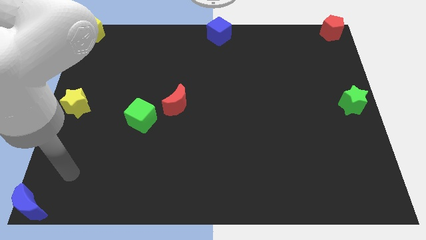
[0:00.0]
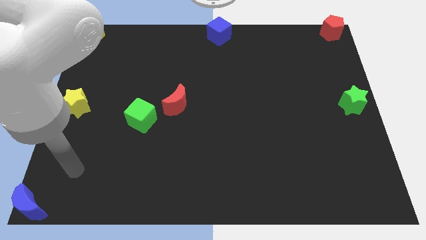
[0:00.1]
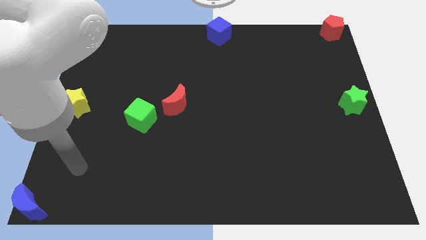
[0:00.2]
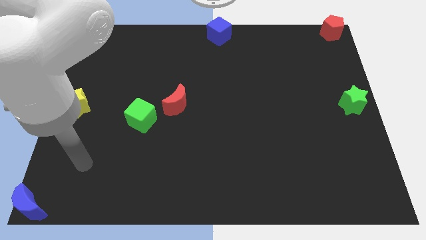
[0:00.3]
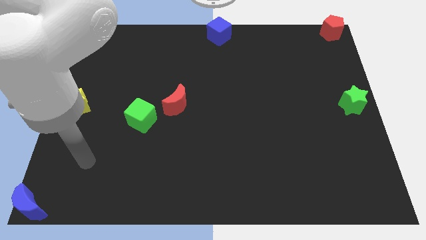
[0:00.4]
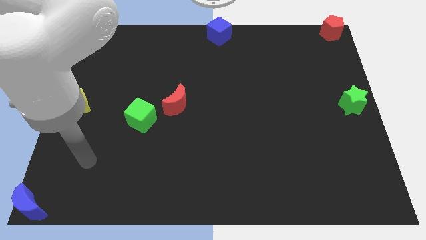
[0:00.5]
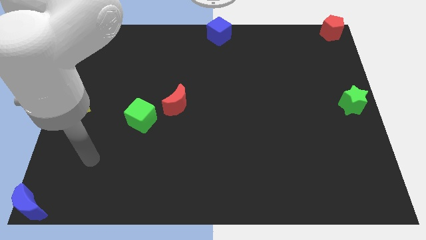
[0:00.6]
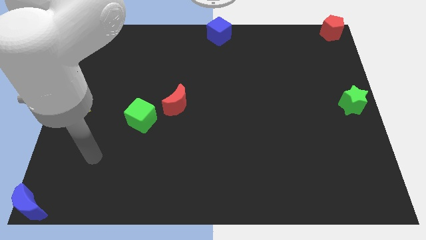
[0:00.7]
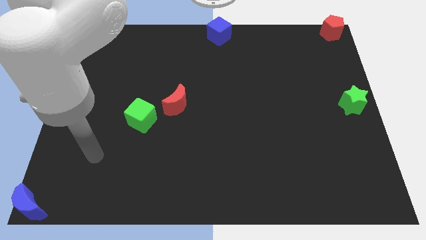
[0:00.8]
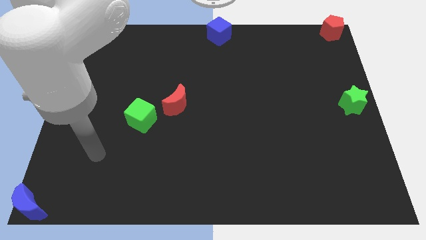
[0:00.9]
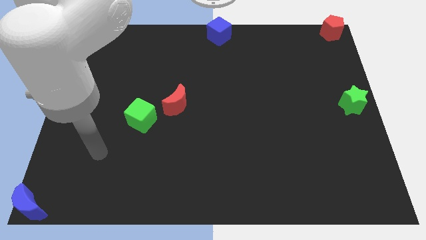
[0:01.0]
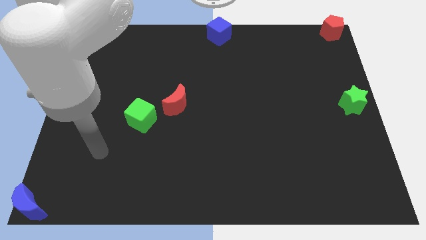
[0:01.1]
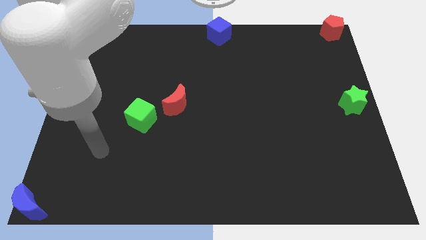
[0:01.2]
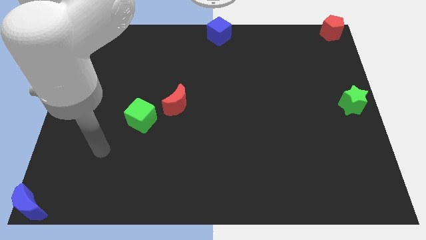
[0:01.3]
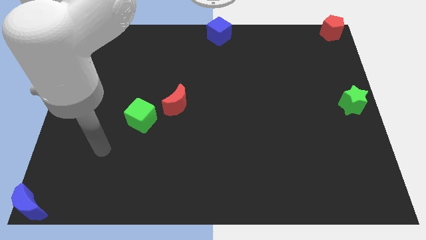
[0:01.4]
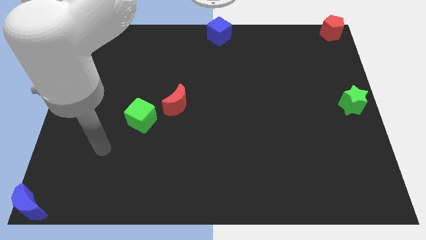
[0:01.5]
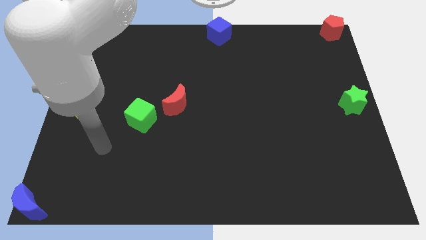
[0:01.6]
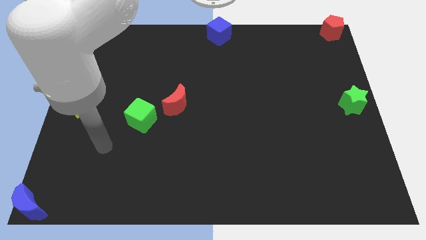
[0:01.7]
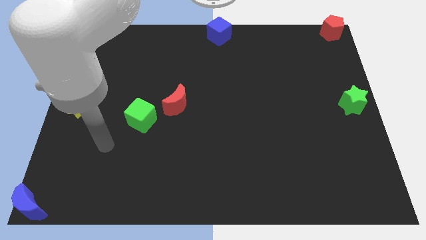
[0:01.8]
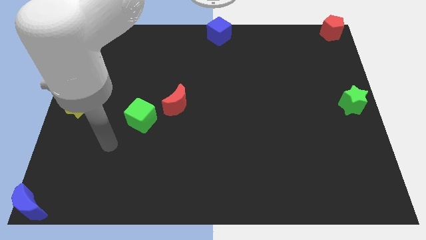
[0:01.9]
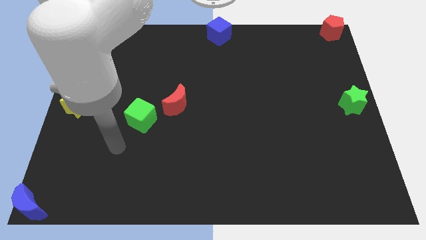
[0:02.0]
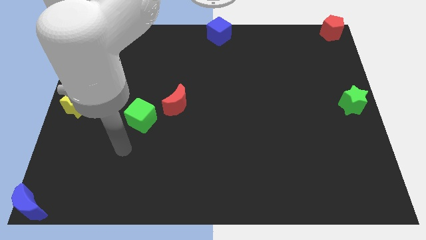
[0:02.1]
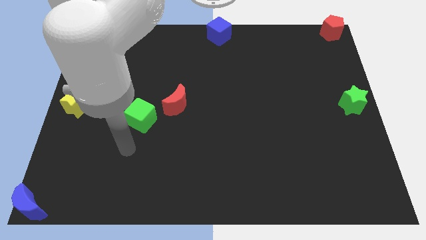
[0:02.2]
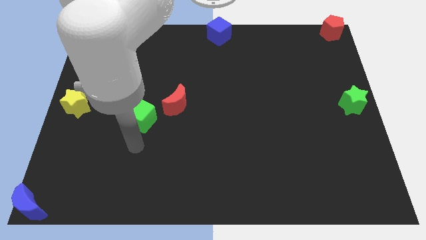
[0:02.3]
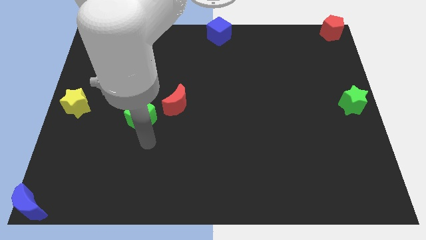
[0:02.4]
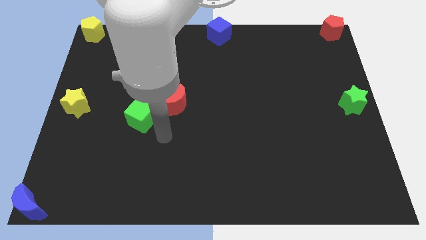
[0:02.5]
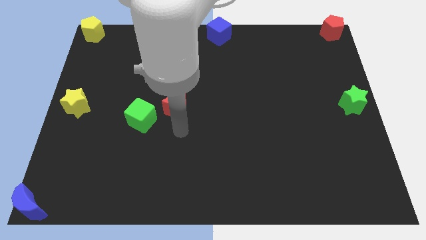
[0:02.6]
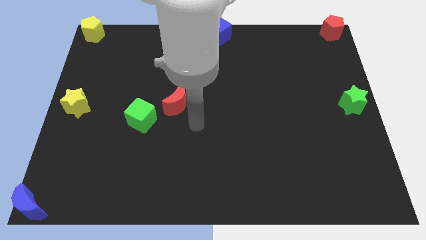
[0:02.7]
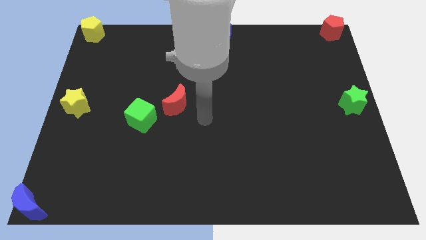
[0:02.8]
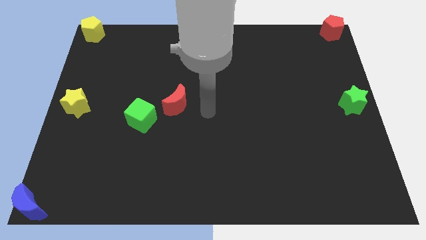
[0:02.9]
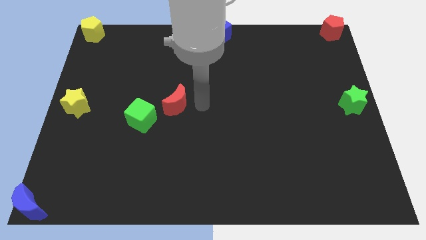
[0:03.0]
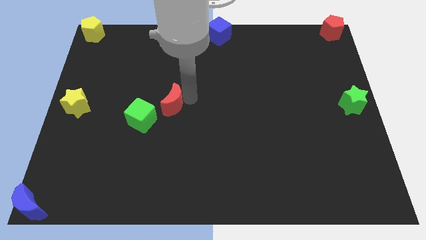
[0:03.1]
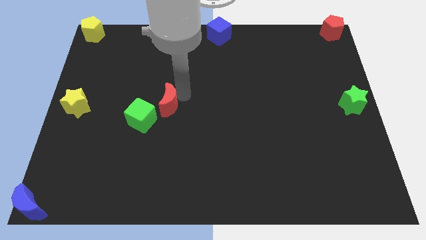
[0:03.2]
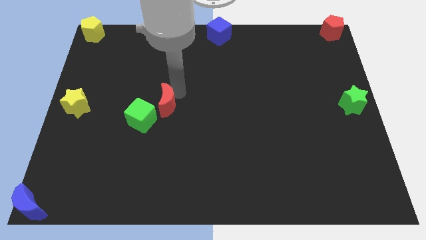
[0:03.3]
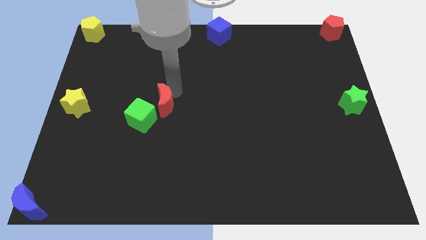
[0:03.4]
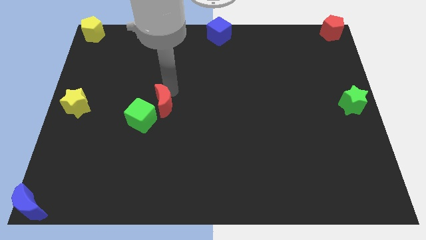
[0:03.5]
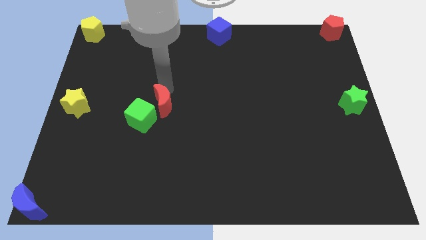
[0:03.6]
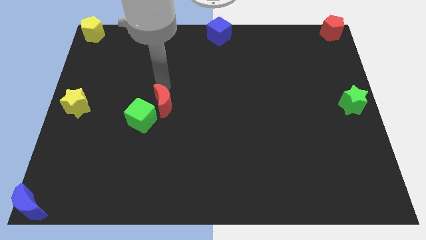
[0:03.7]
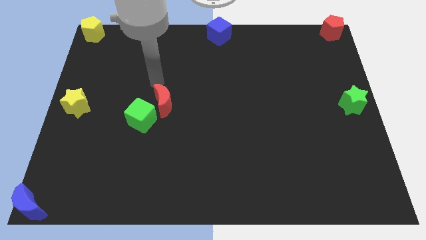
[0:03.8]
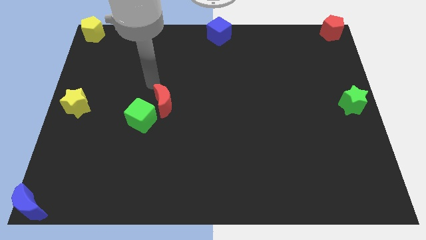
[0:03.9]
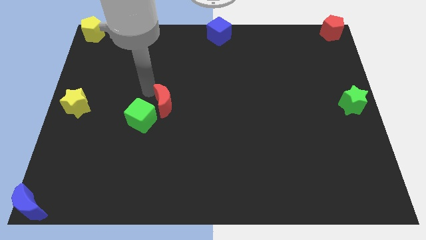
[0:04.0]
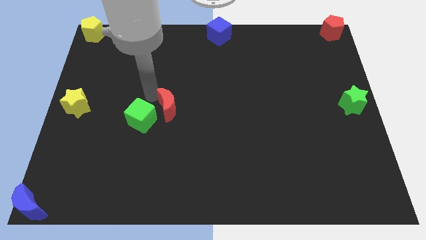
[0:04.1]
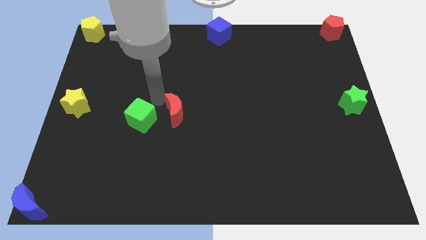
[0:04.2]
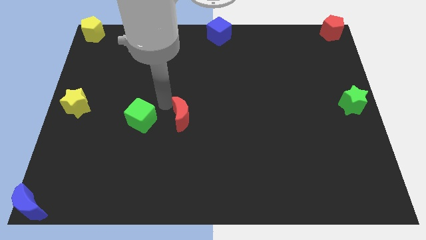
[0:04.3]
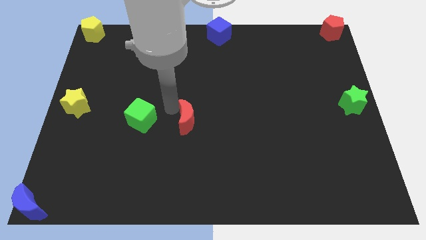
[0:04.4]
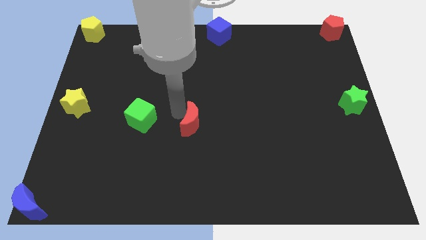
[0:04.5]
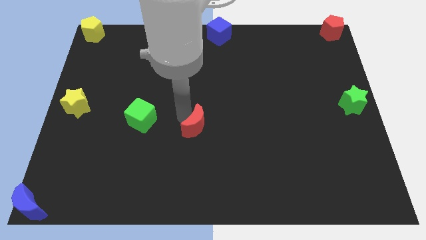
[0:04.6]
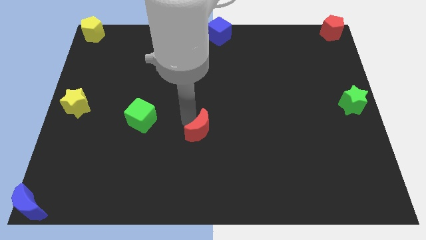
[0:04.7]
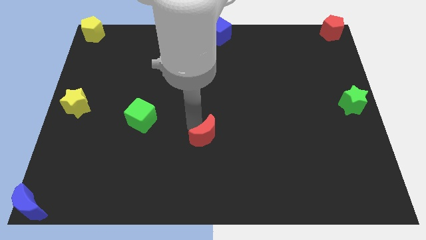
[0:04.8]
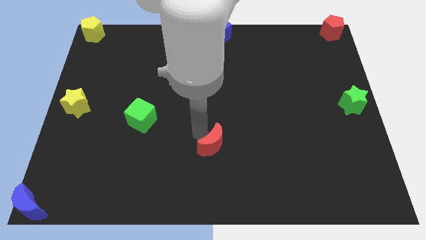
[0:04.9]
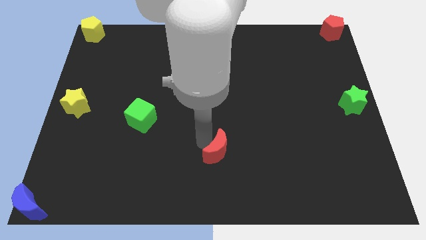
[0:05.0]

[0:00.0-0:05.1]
move the red moon away from the green cube

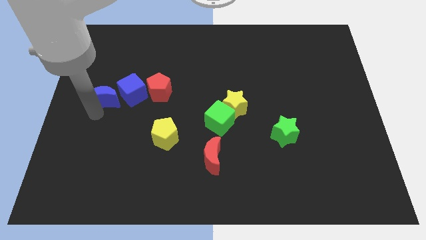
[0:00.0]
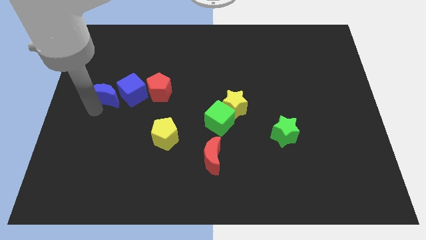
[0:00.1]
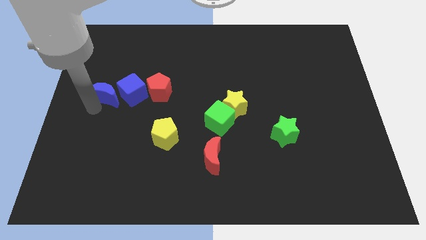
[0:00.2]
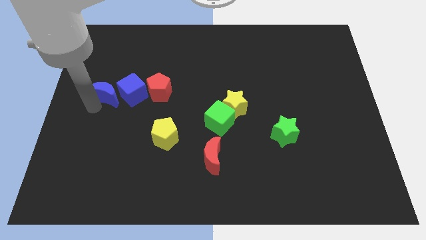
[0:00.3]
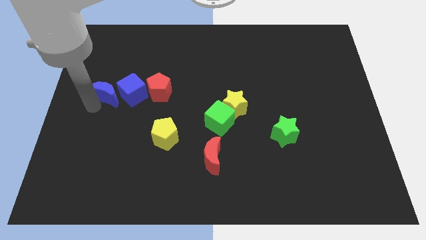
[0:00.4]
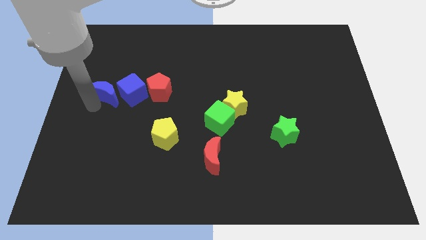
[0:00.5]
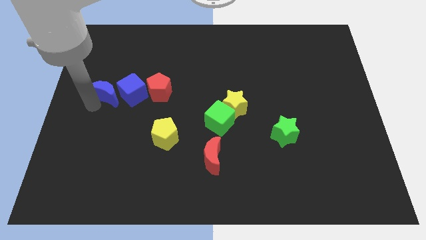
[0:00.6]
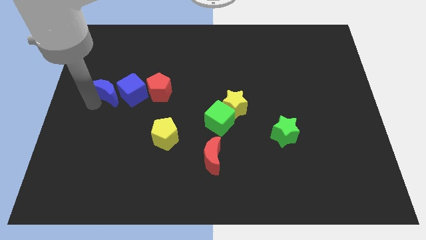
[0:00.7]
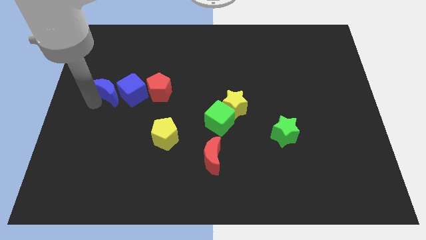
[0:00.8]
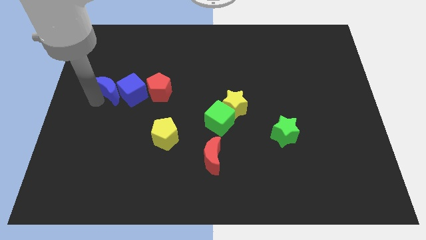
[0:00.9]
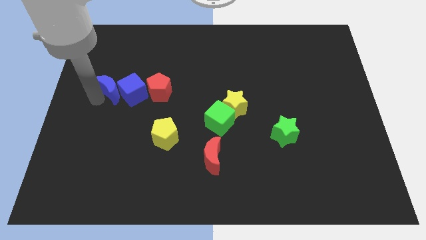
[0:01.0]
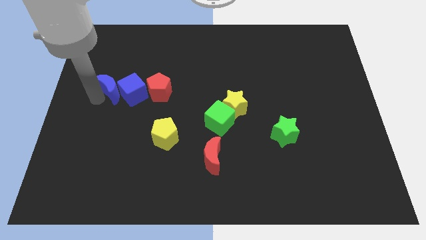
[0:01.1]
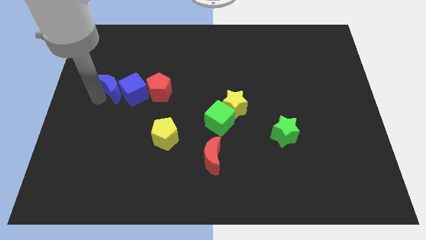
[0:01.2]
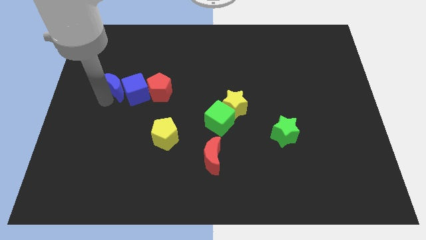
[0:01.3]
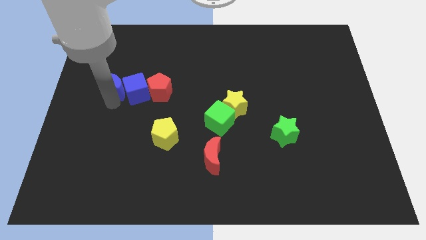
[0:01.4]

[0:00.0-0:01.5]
adjust blue moon slightly

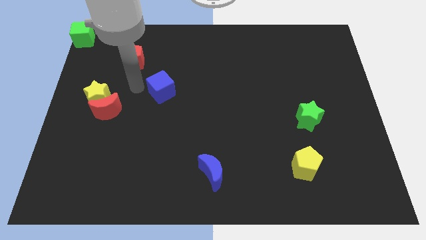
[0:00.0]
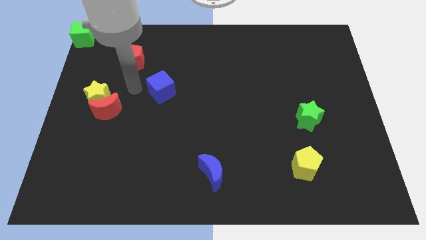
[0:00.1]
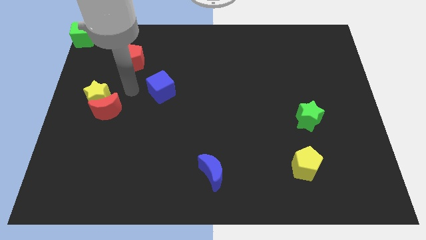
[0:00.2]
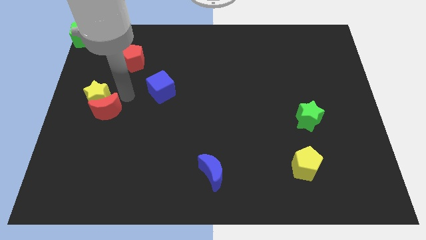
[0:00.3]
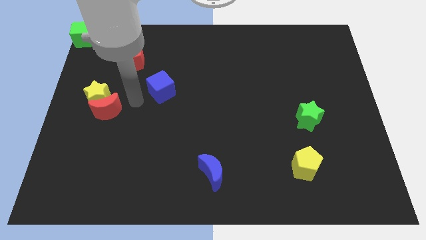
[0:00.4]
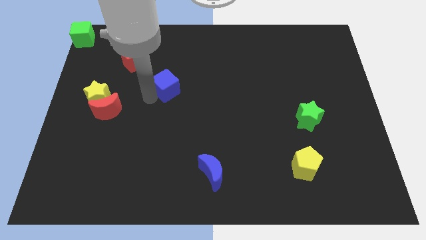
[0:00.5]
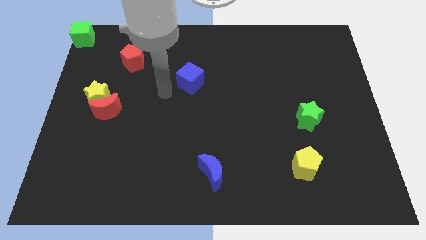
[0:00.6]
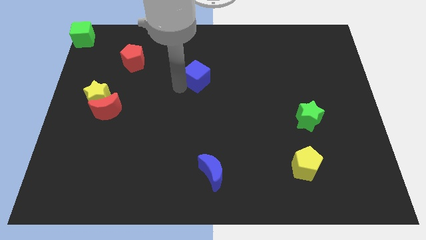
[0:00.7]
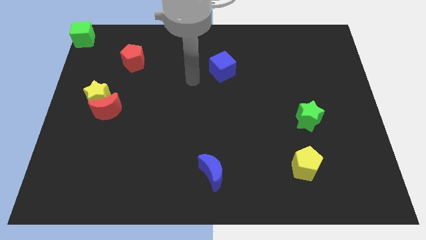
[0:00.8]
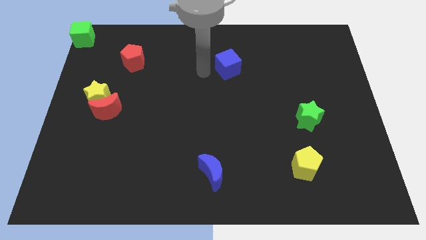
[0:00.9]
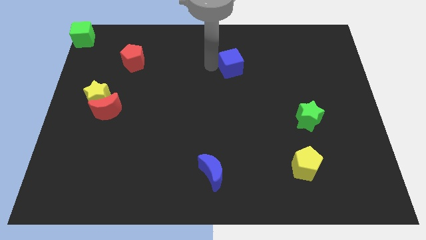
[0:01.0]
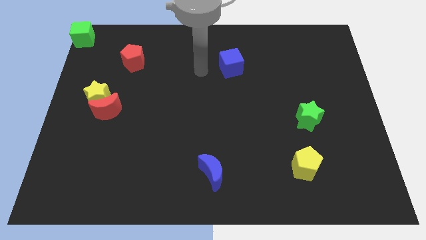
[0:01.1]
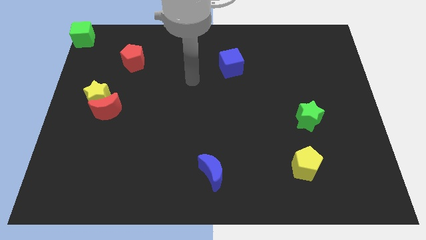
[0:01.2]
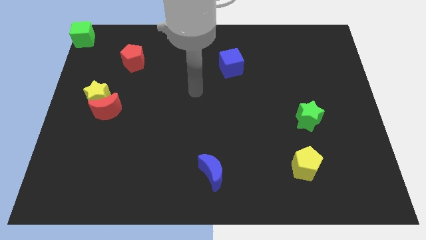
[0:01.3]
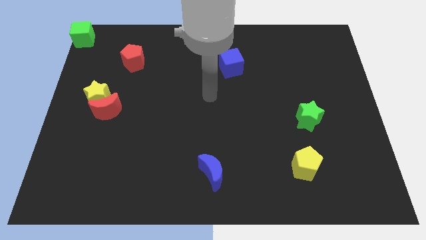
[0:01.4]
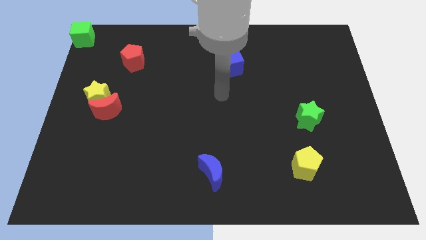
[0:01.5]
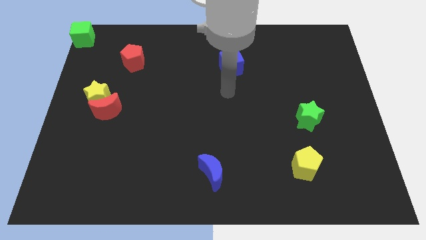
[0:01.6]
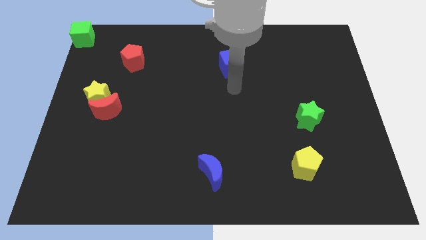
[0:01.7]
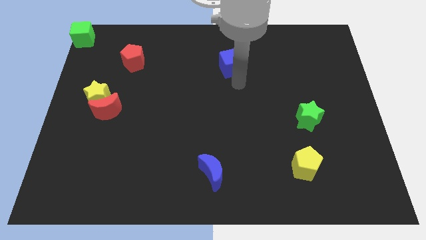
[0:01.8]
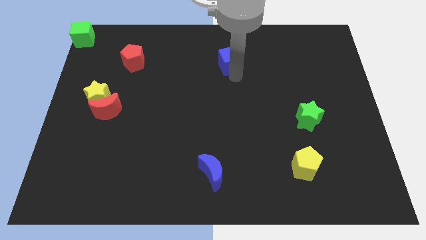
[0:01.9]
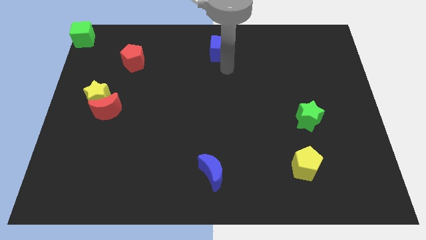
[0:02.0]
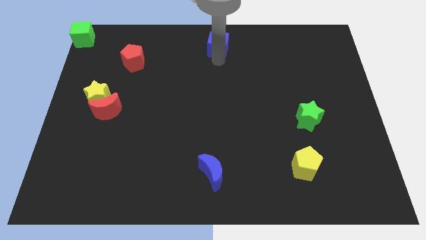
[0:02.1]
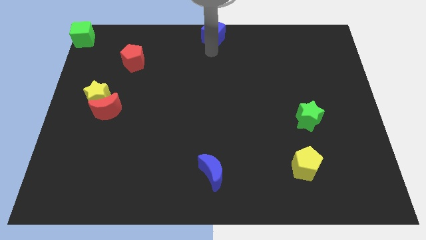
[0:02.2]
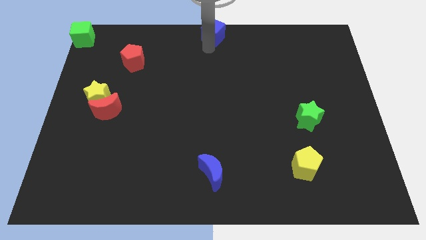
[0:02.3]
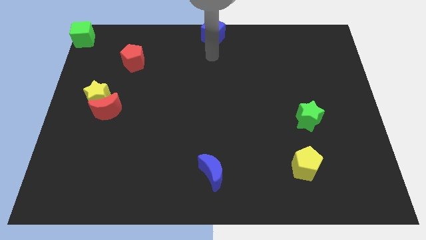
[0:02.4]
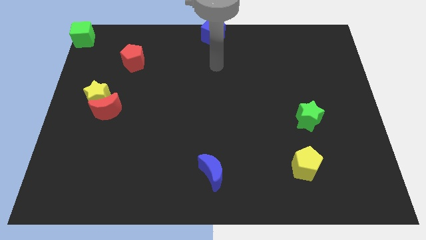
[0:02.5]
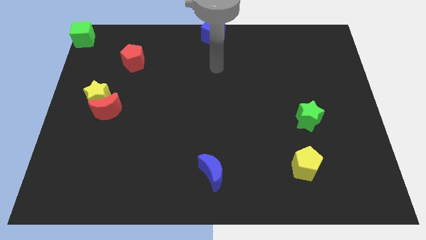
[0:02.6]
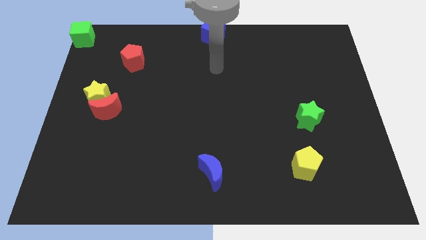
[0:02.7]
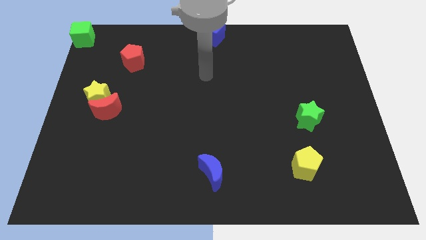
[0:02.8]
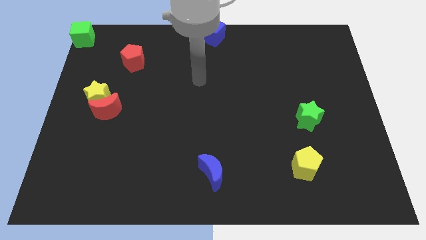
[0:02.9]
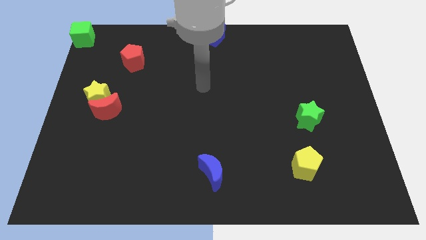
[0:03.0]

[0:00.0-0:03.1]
push the blue cube to the top center
